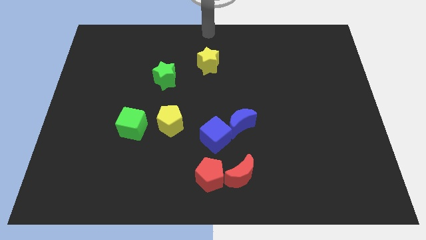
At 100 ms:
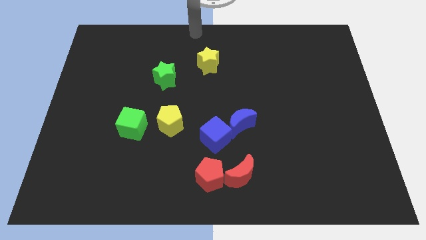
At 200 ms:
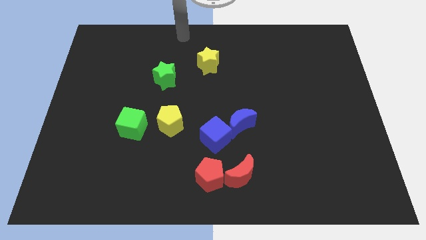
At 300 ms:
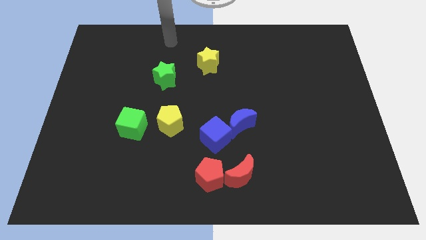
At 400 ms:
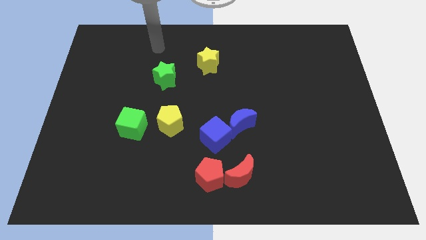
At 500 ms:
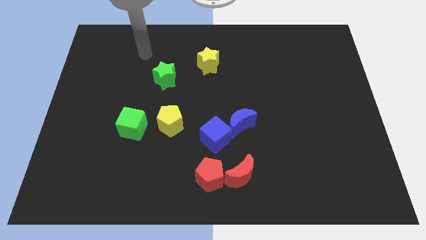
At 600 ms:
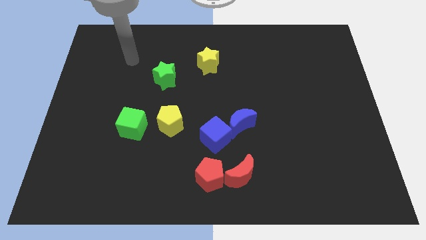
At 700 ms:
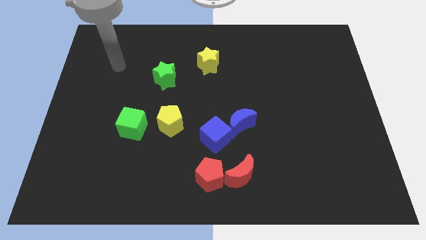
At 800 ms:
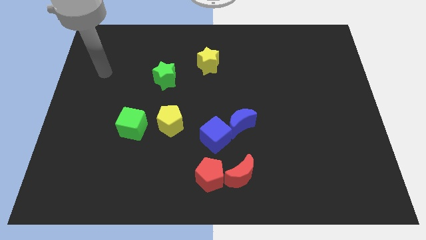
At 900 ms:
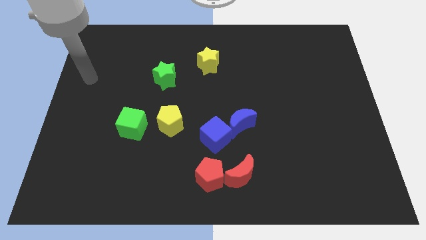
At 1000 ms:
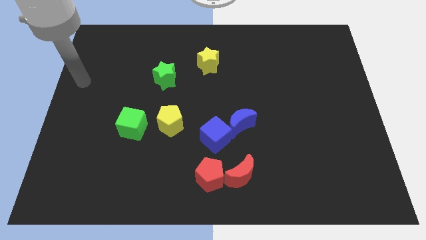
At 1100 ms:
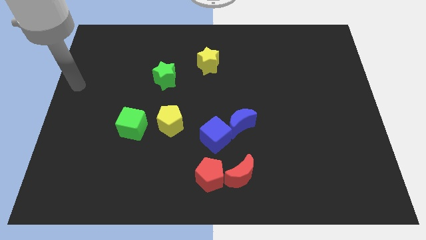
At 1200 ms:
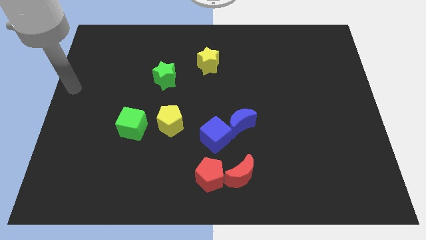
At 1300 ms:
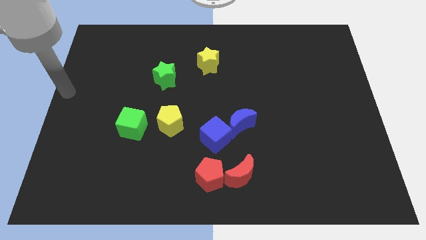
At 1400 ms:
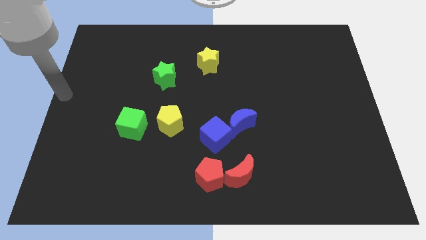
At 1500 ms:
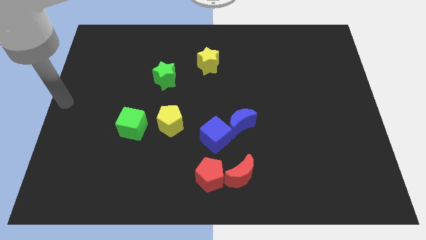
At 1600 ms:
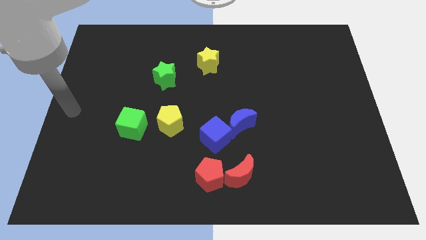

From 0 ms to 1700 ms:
move your arm to the center left of the board

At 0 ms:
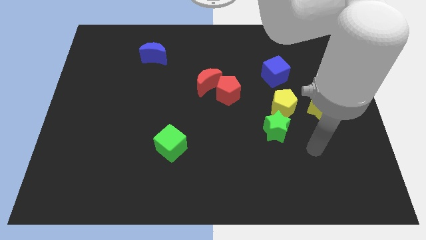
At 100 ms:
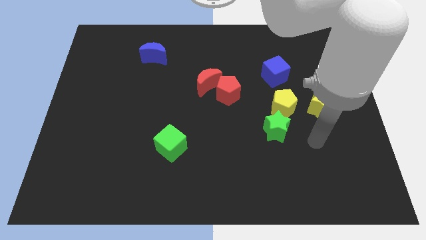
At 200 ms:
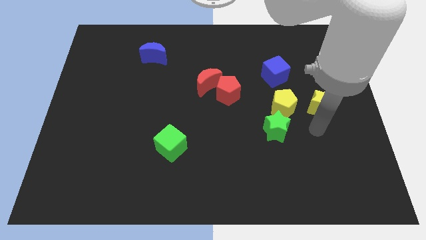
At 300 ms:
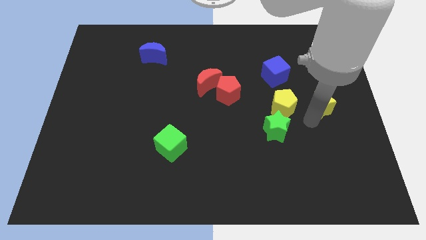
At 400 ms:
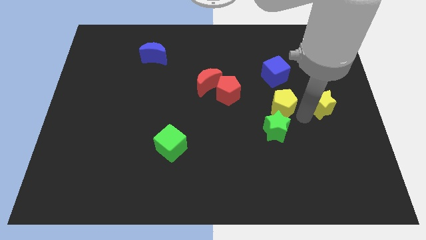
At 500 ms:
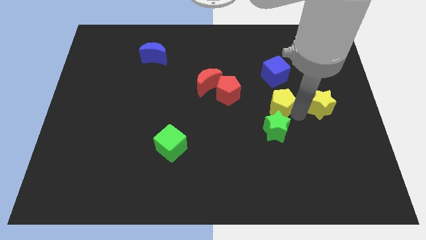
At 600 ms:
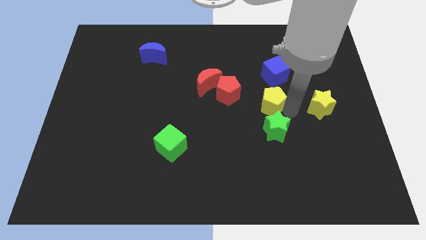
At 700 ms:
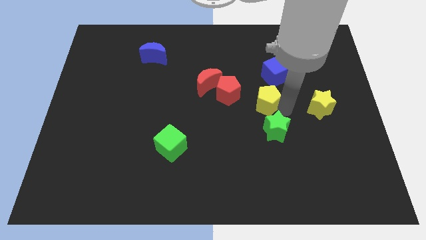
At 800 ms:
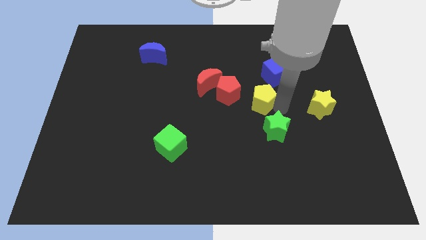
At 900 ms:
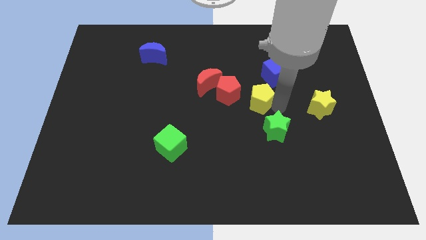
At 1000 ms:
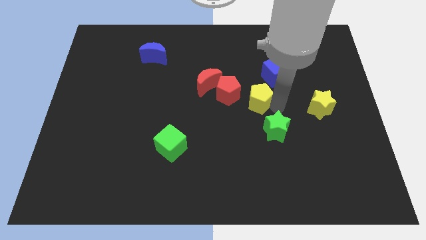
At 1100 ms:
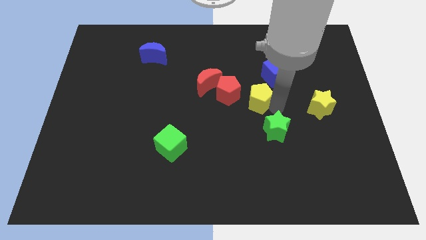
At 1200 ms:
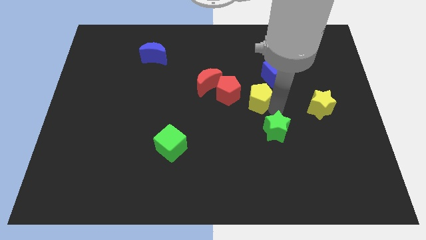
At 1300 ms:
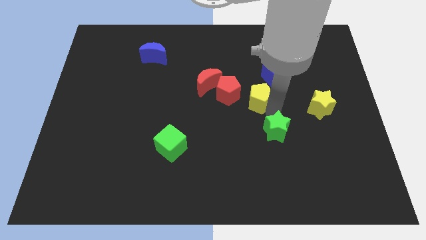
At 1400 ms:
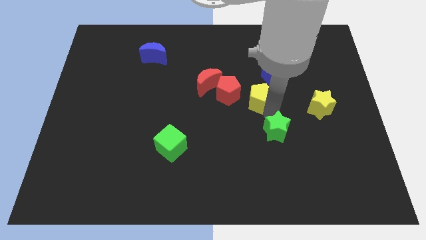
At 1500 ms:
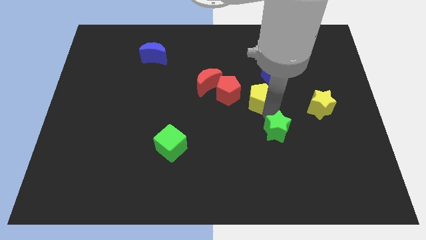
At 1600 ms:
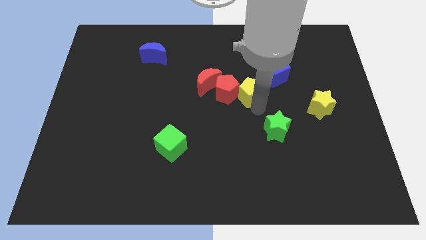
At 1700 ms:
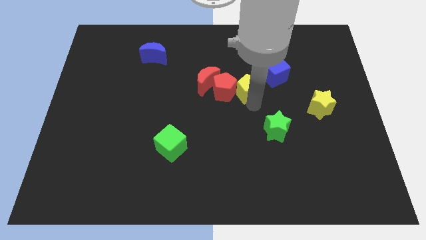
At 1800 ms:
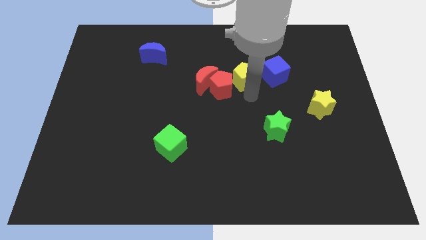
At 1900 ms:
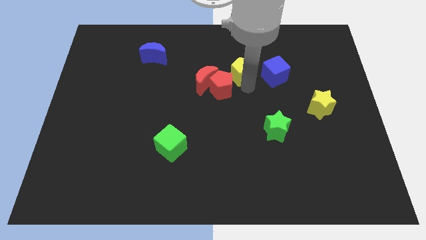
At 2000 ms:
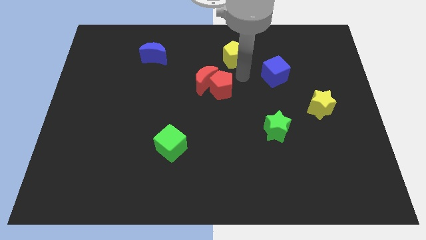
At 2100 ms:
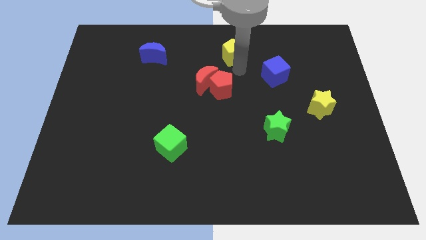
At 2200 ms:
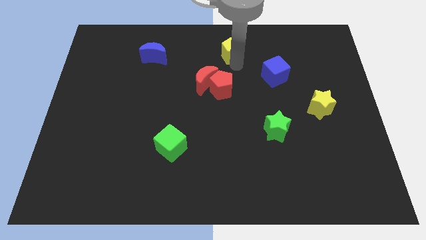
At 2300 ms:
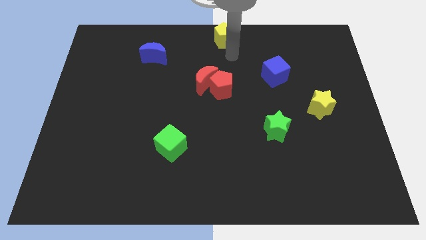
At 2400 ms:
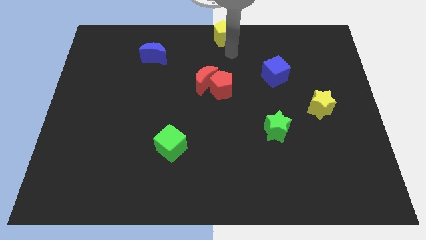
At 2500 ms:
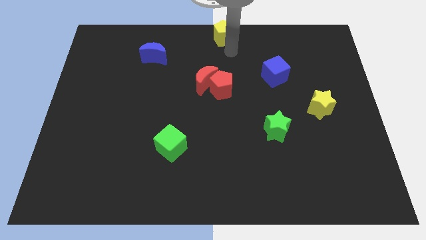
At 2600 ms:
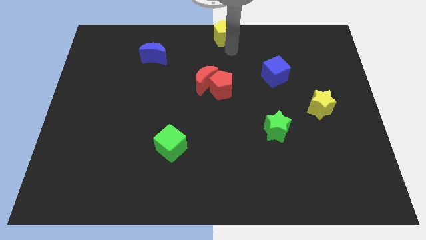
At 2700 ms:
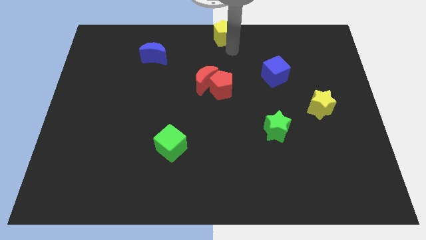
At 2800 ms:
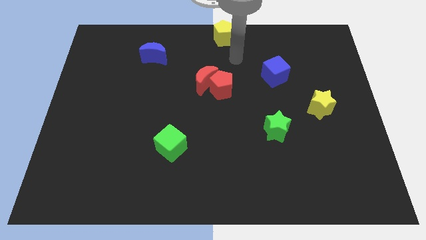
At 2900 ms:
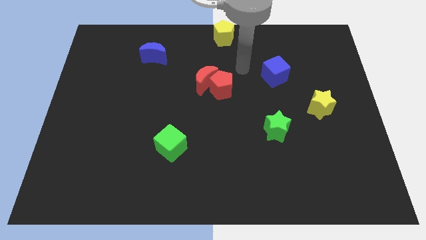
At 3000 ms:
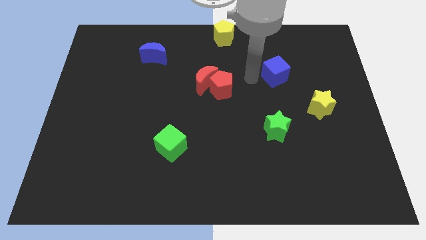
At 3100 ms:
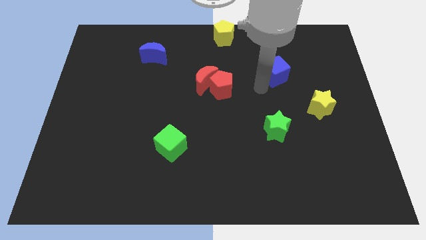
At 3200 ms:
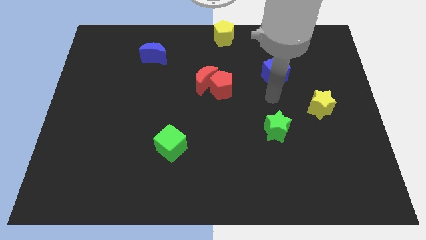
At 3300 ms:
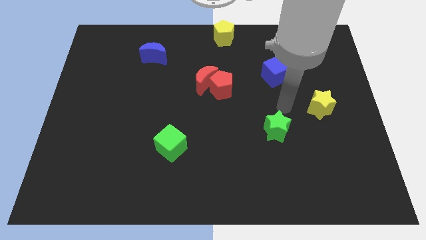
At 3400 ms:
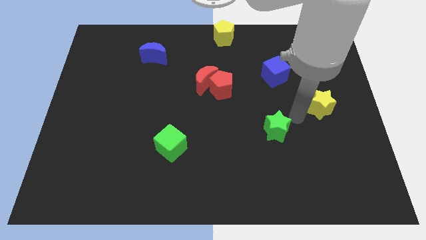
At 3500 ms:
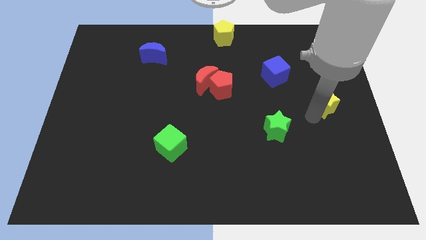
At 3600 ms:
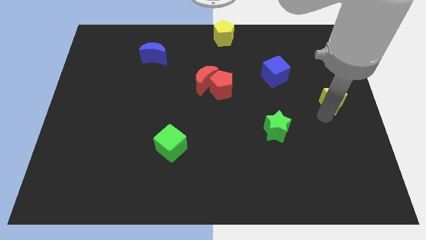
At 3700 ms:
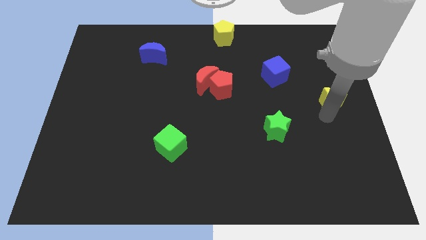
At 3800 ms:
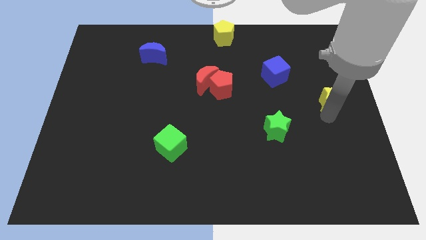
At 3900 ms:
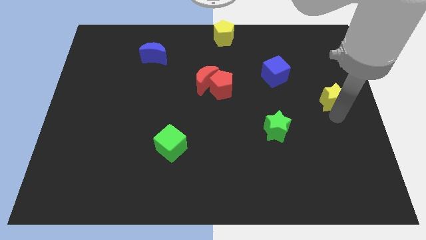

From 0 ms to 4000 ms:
turn yellow star slightly

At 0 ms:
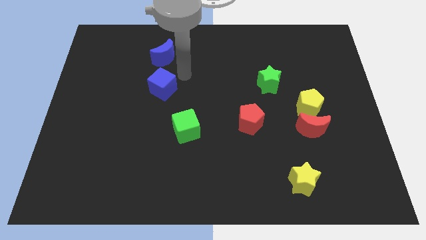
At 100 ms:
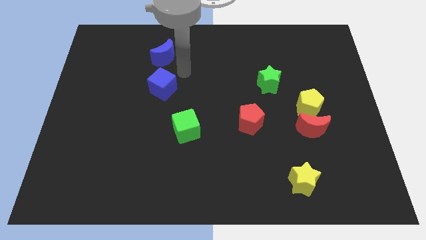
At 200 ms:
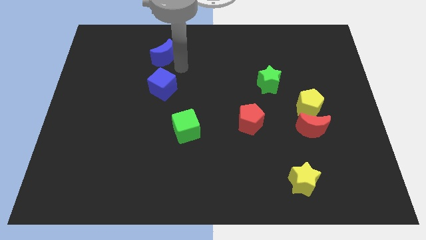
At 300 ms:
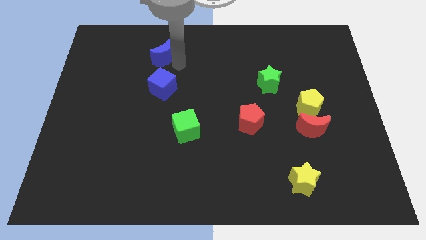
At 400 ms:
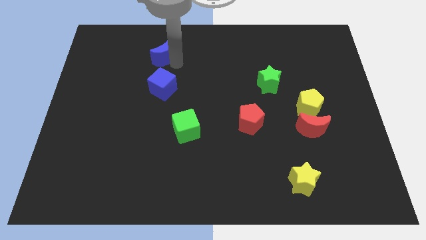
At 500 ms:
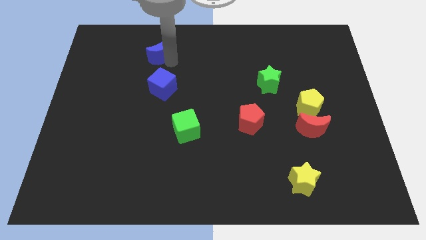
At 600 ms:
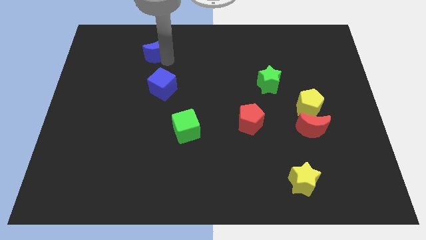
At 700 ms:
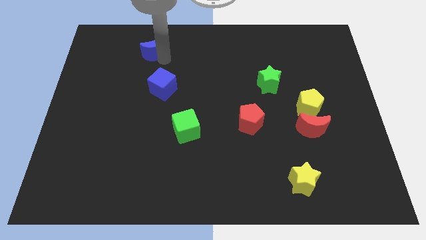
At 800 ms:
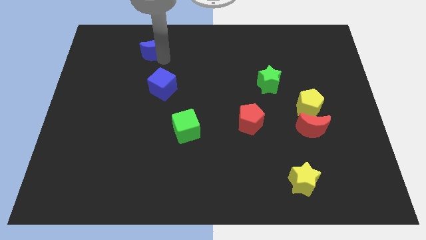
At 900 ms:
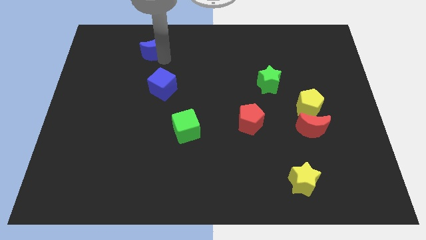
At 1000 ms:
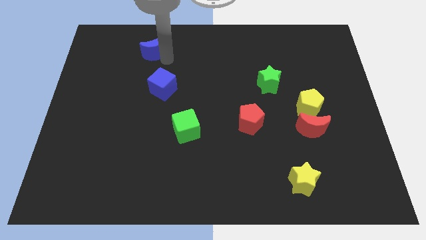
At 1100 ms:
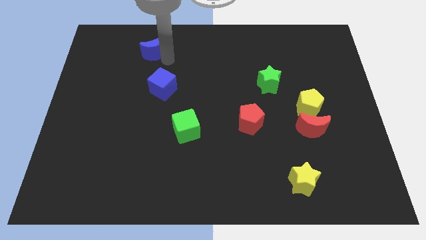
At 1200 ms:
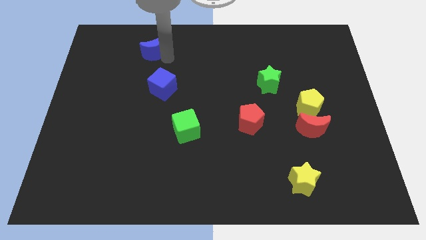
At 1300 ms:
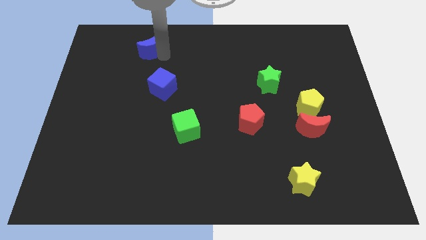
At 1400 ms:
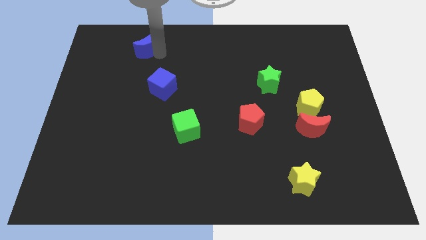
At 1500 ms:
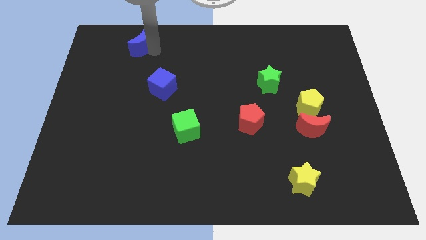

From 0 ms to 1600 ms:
separate blue moon from the blue cube

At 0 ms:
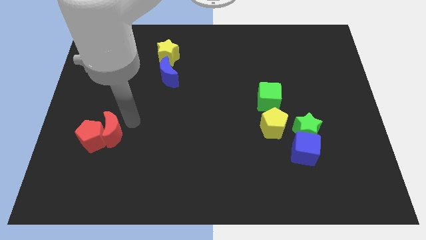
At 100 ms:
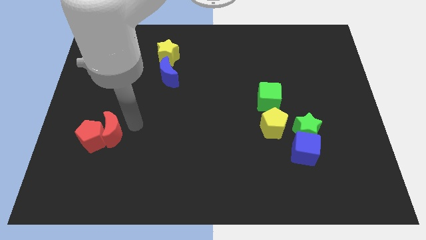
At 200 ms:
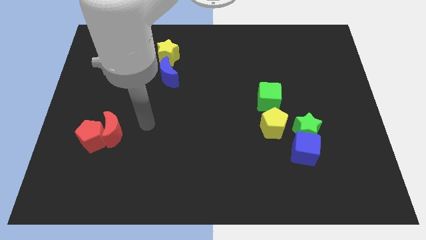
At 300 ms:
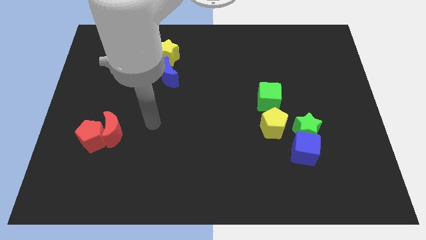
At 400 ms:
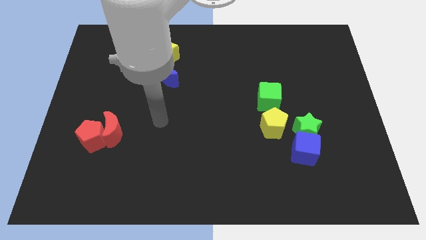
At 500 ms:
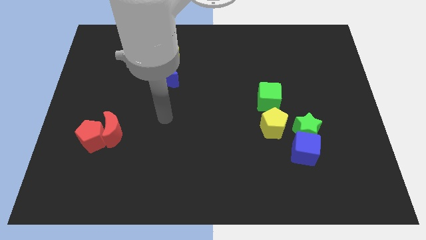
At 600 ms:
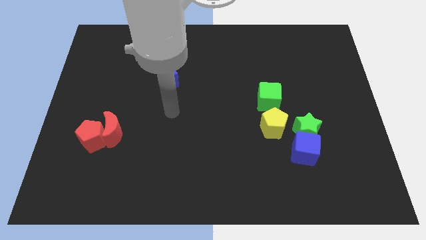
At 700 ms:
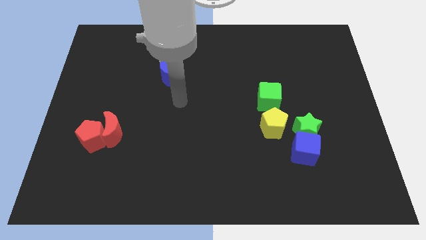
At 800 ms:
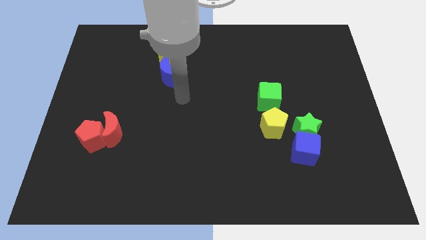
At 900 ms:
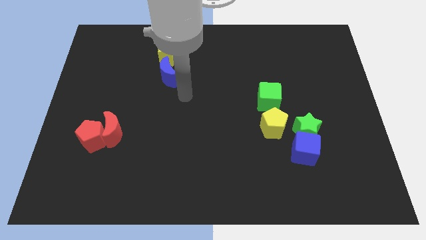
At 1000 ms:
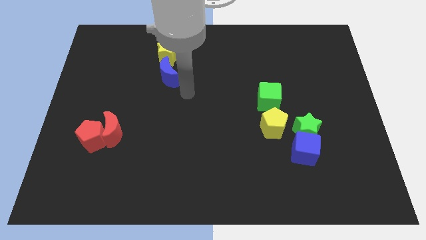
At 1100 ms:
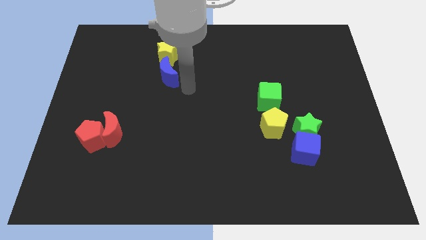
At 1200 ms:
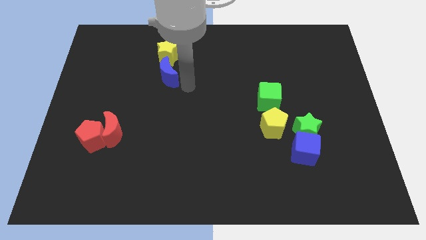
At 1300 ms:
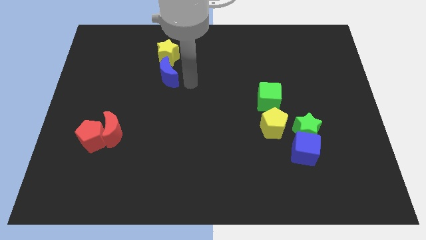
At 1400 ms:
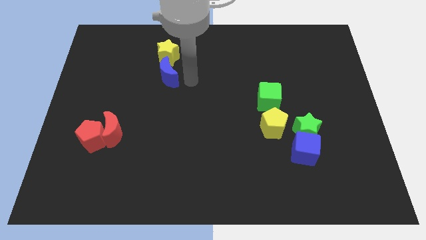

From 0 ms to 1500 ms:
point your arm at the right of the blue crescent
